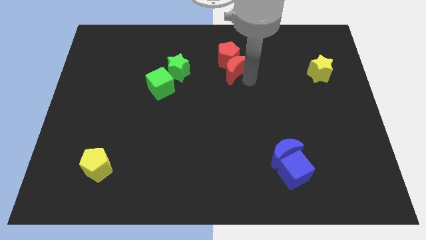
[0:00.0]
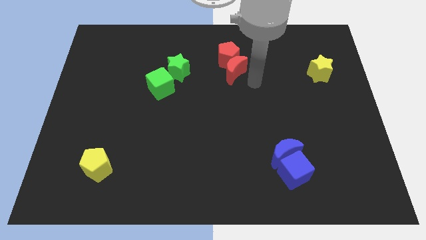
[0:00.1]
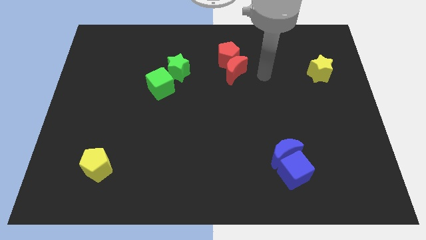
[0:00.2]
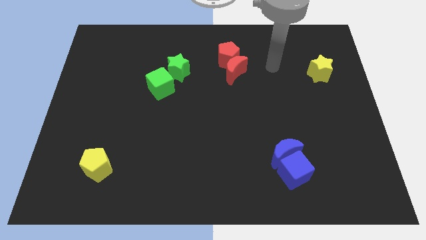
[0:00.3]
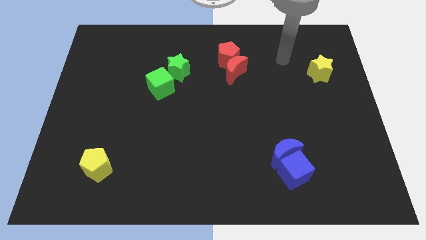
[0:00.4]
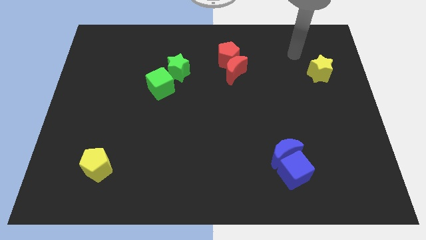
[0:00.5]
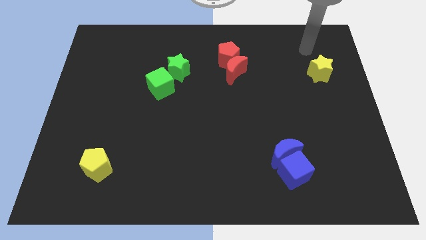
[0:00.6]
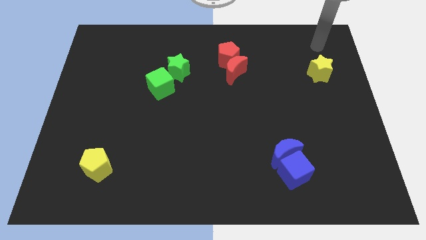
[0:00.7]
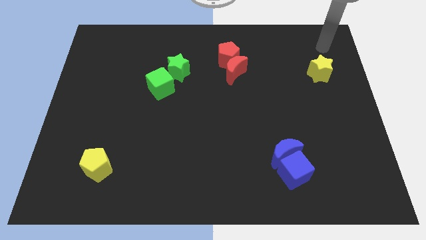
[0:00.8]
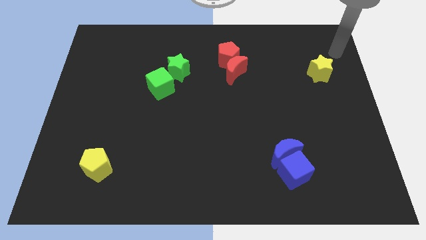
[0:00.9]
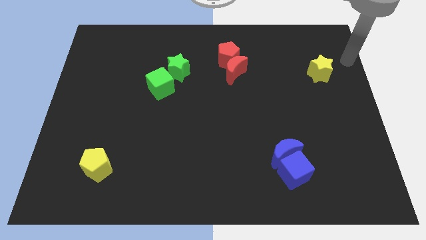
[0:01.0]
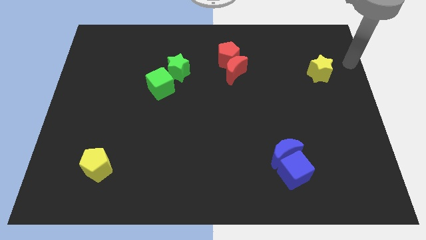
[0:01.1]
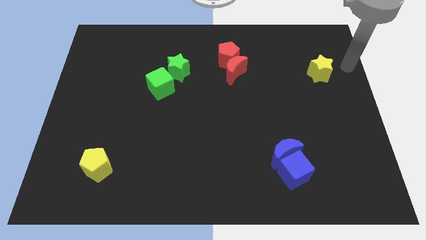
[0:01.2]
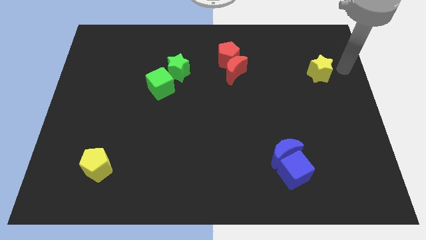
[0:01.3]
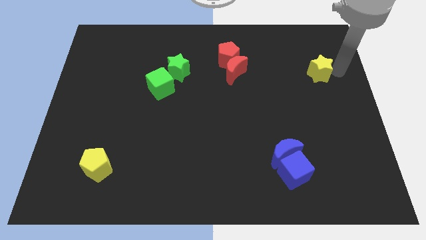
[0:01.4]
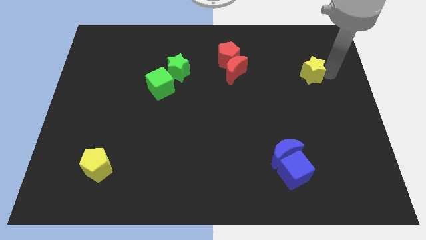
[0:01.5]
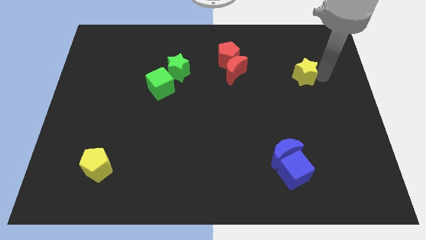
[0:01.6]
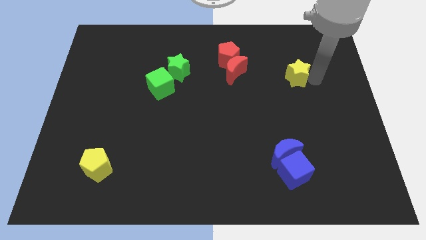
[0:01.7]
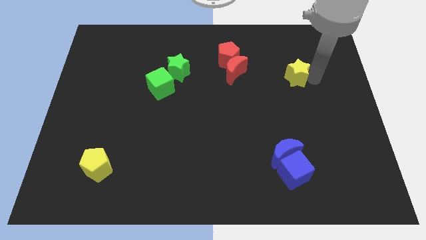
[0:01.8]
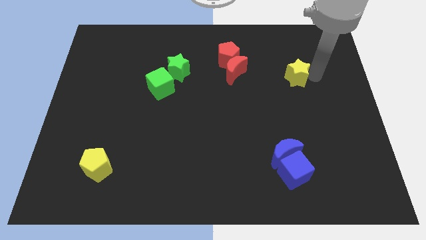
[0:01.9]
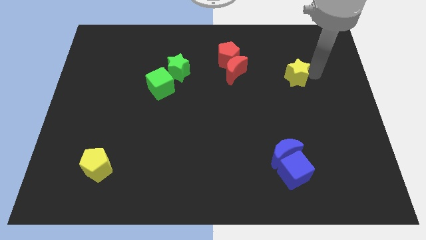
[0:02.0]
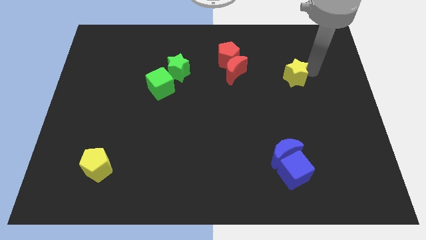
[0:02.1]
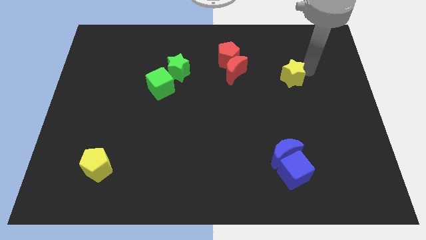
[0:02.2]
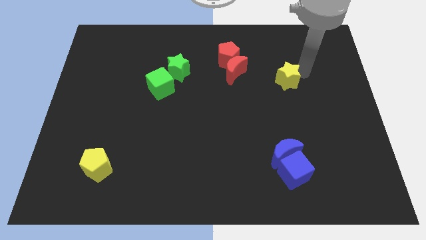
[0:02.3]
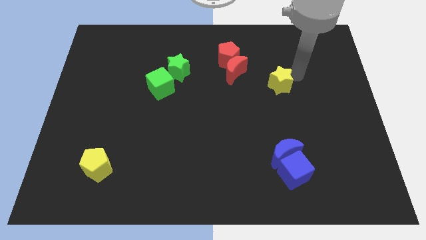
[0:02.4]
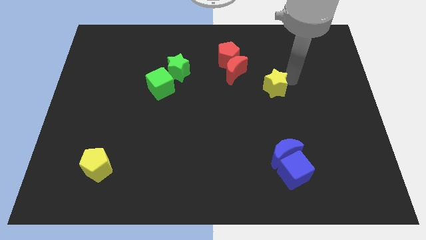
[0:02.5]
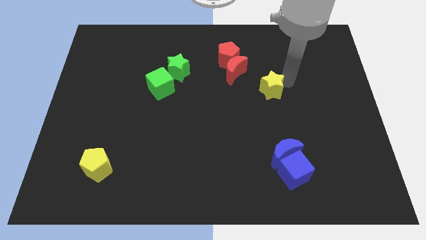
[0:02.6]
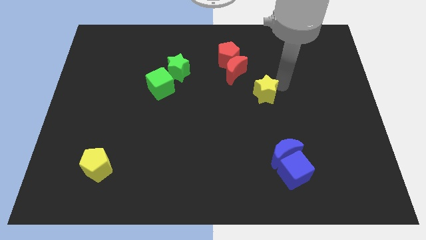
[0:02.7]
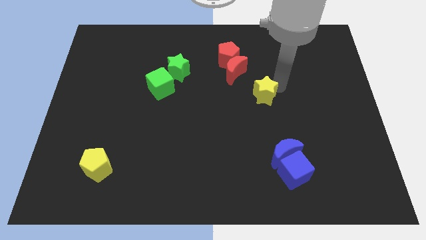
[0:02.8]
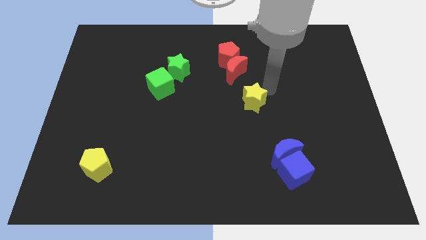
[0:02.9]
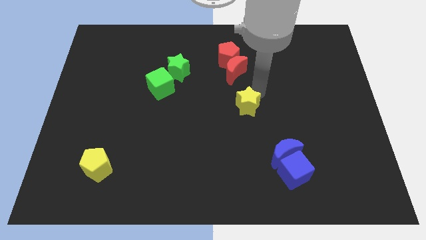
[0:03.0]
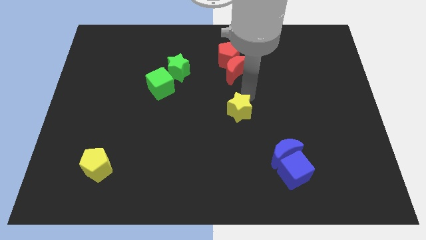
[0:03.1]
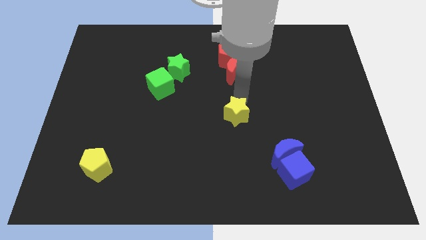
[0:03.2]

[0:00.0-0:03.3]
place yellow star to the bottom of red moon

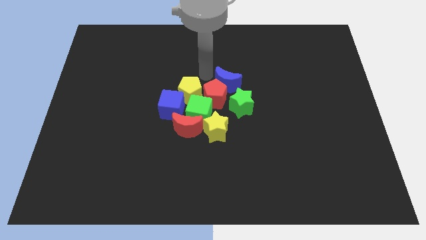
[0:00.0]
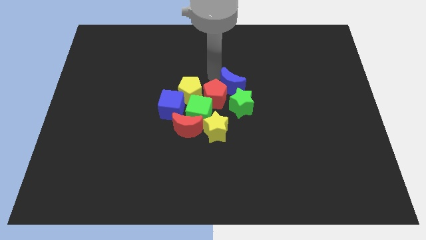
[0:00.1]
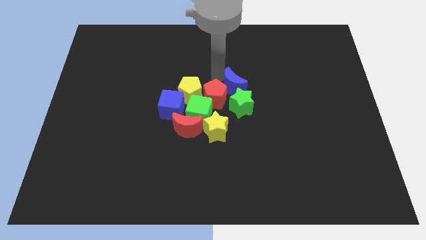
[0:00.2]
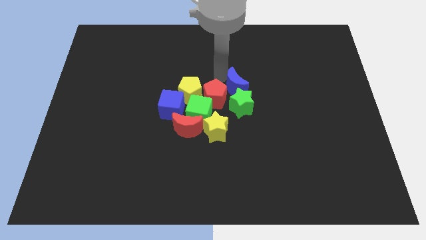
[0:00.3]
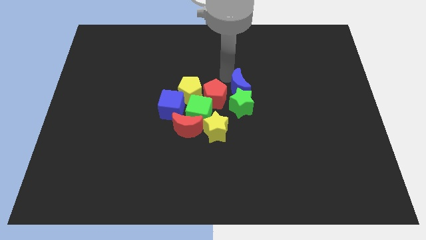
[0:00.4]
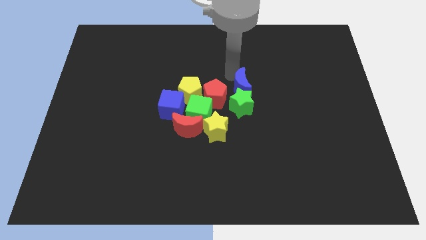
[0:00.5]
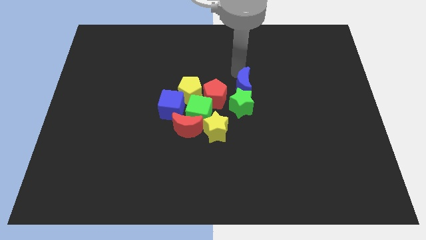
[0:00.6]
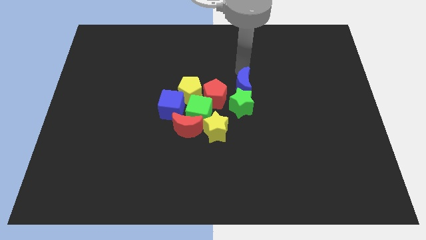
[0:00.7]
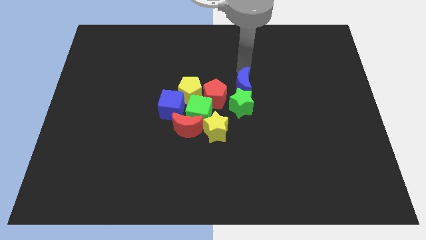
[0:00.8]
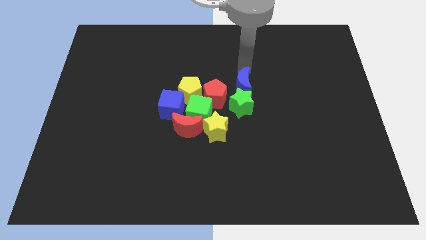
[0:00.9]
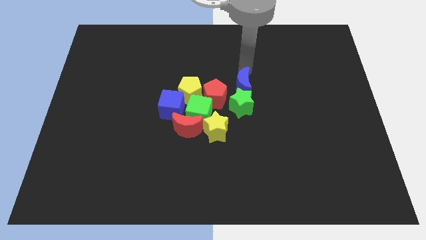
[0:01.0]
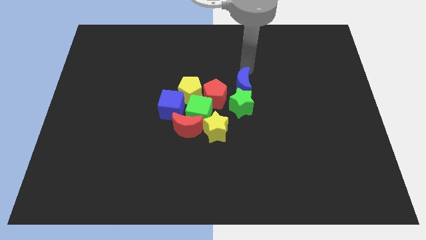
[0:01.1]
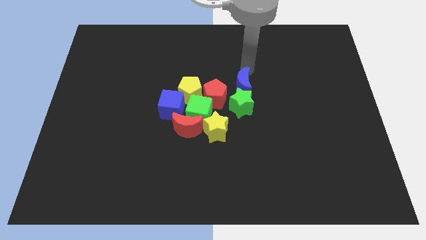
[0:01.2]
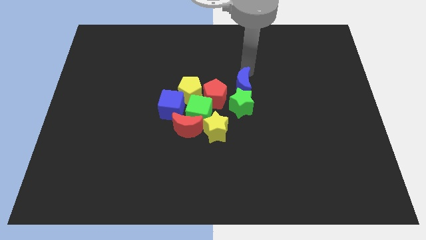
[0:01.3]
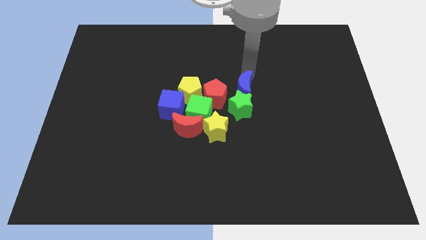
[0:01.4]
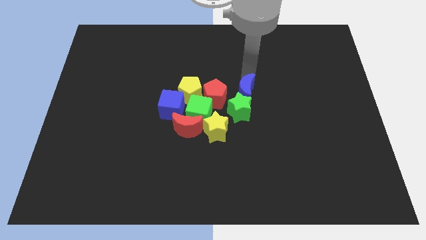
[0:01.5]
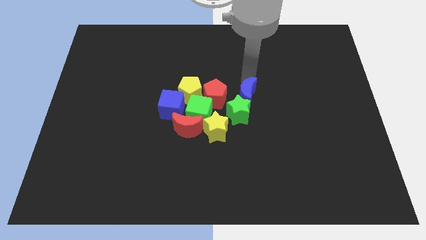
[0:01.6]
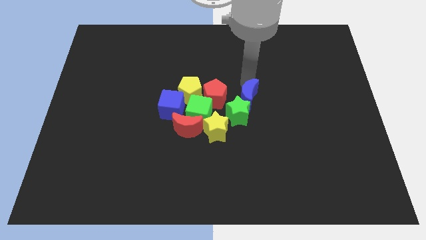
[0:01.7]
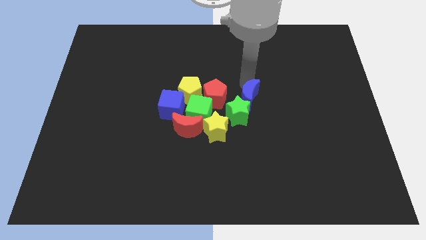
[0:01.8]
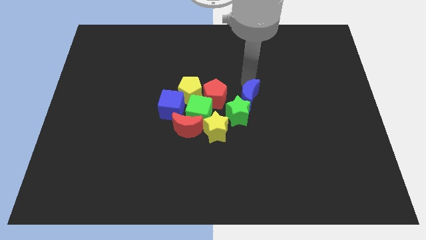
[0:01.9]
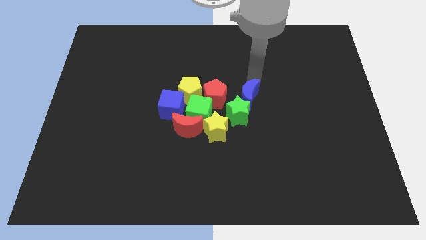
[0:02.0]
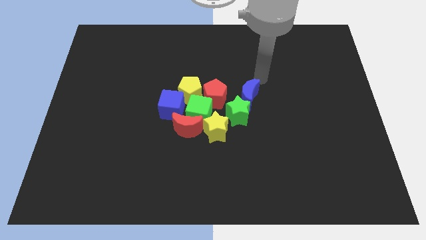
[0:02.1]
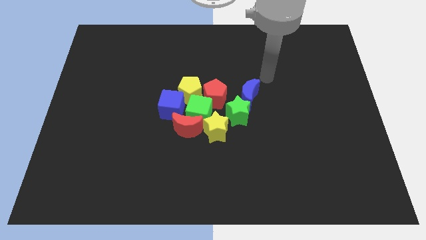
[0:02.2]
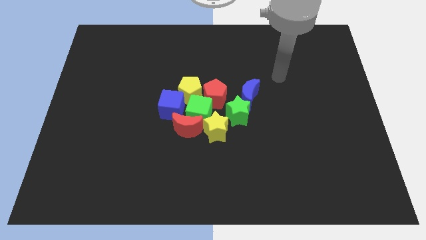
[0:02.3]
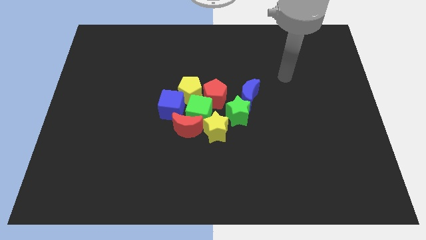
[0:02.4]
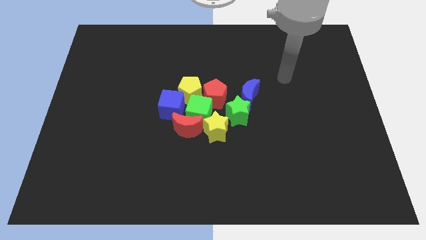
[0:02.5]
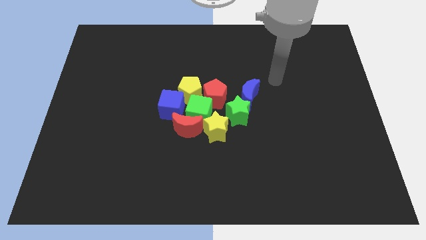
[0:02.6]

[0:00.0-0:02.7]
move blue moon and green star towards the group of blocks

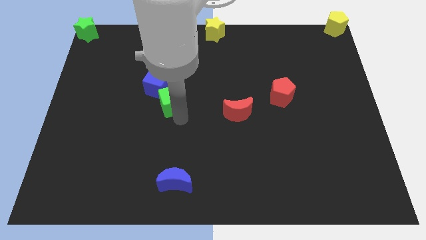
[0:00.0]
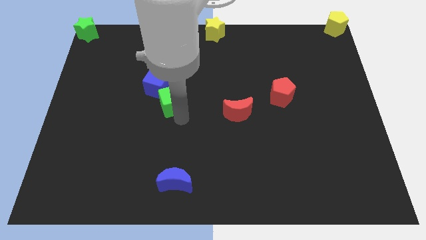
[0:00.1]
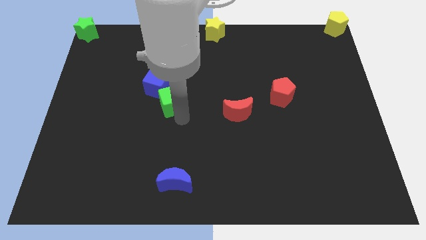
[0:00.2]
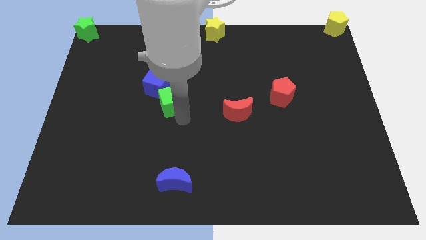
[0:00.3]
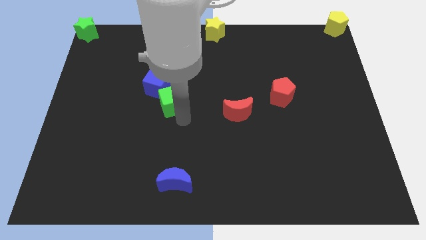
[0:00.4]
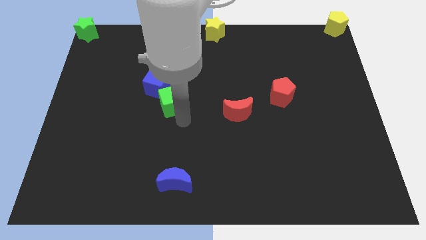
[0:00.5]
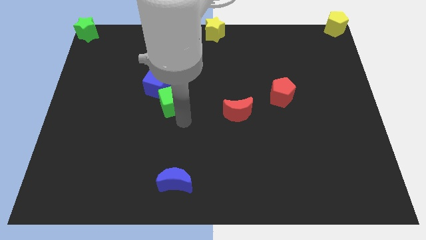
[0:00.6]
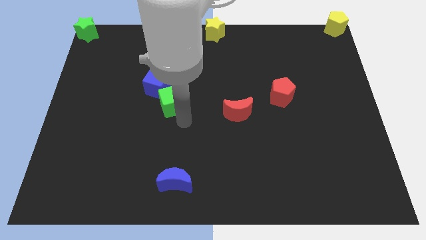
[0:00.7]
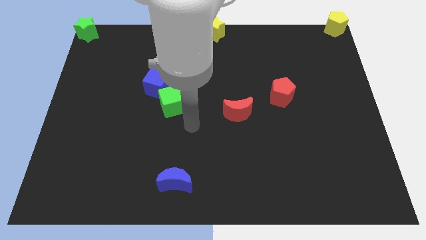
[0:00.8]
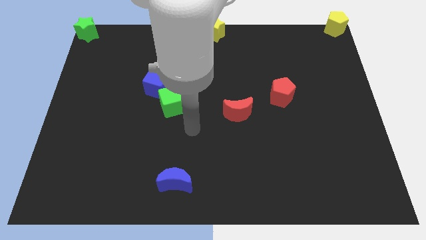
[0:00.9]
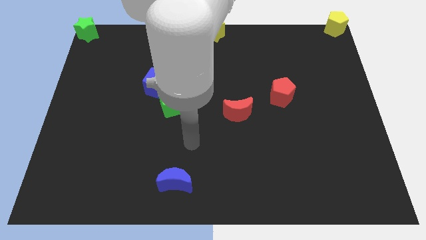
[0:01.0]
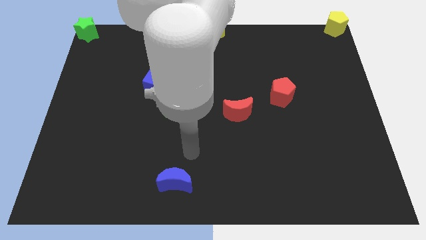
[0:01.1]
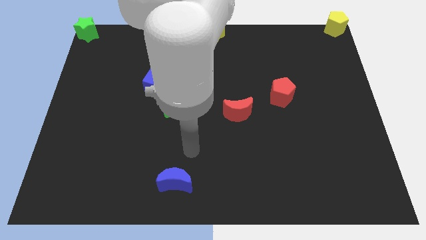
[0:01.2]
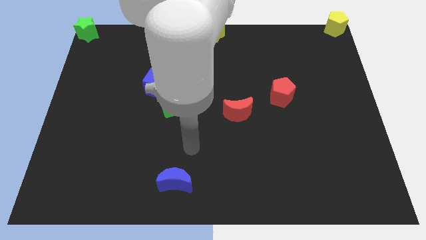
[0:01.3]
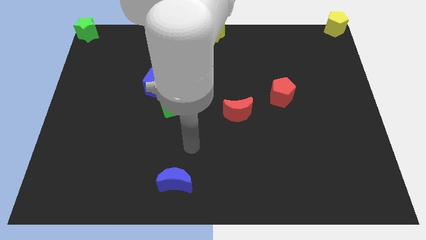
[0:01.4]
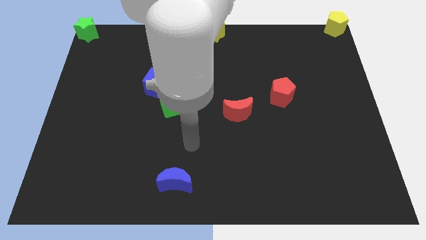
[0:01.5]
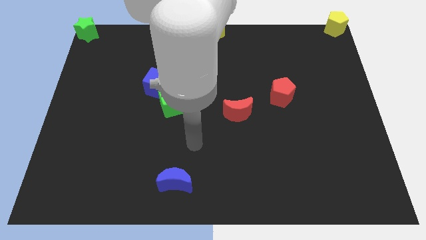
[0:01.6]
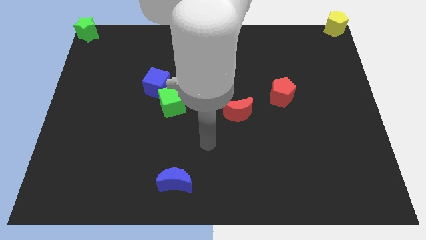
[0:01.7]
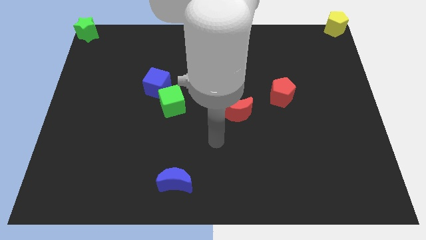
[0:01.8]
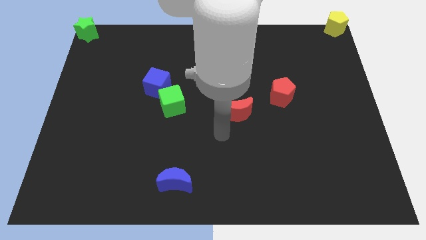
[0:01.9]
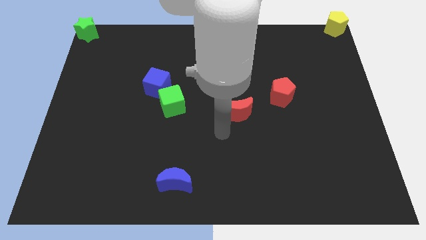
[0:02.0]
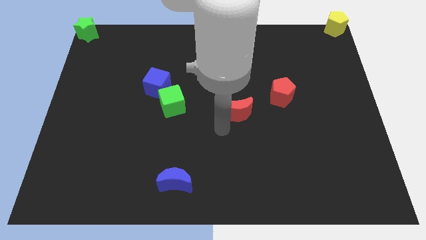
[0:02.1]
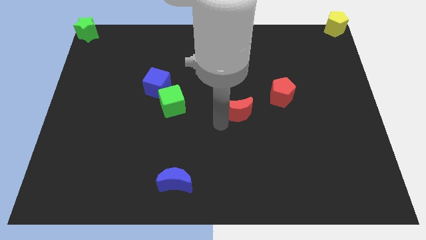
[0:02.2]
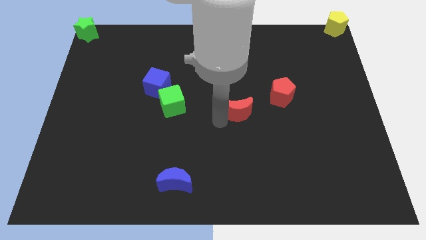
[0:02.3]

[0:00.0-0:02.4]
point your arm to the bottom left of the red moon

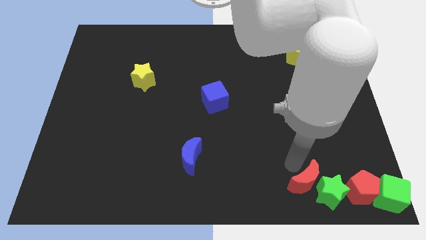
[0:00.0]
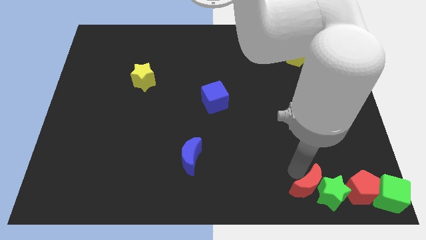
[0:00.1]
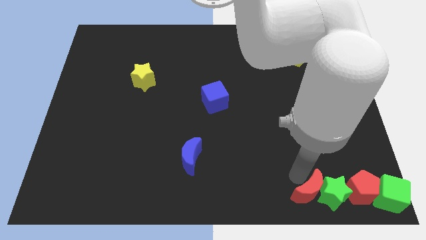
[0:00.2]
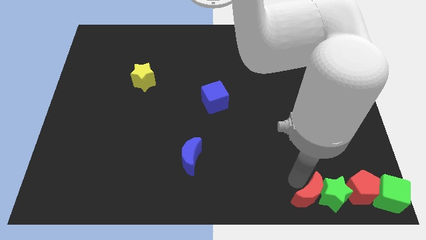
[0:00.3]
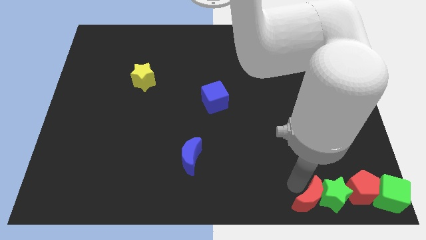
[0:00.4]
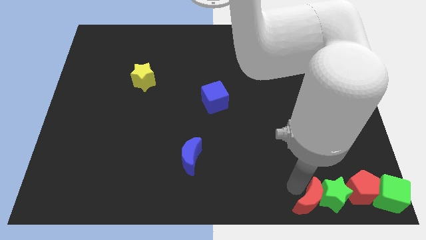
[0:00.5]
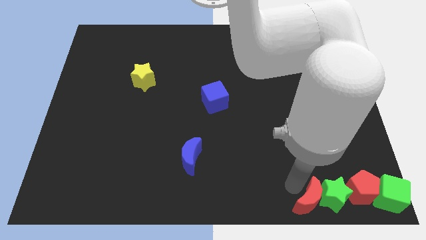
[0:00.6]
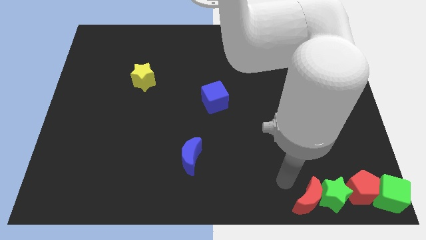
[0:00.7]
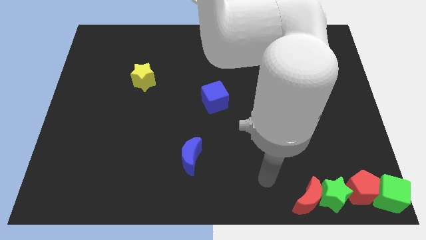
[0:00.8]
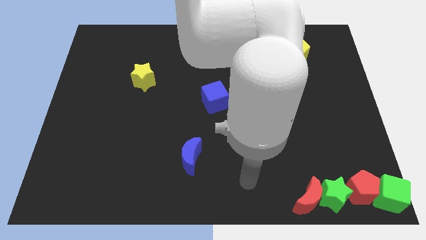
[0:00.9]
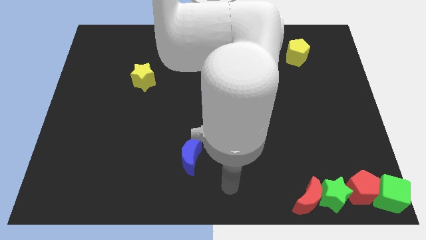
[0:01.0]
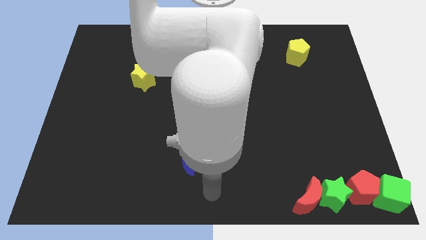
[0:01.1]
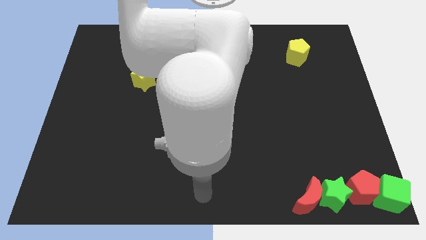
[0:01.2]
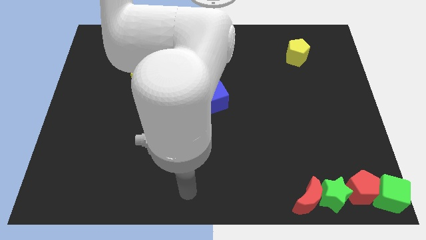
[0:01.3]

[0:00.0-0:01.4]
move red moon into green star
